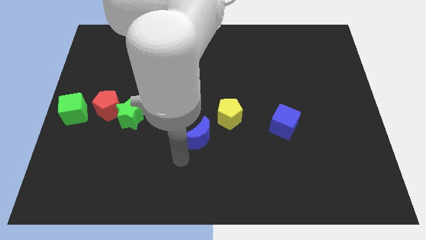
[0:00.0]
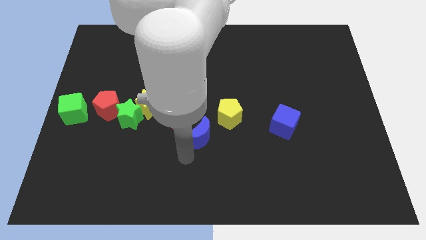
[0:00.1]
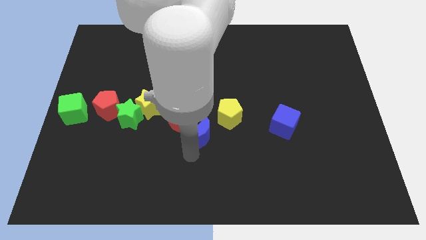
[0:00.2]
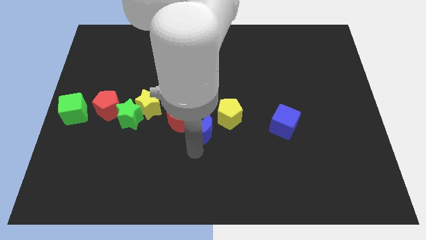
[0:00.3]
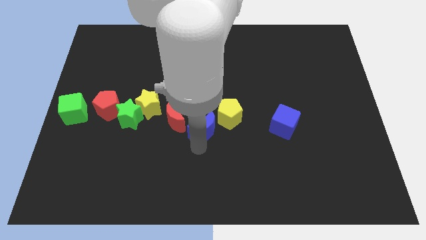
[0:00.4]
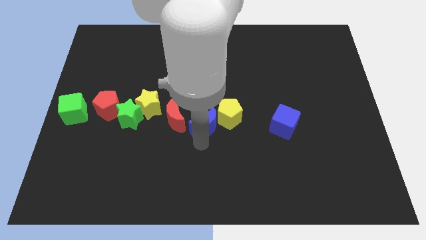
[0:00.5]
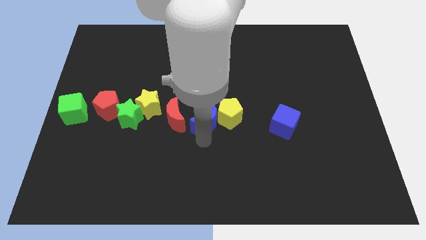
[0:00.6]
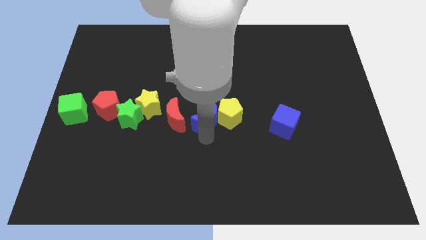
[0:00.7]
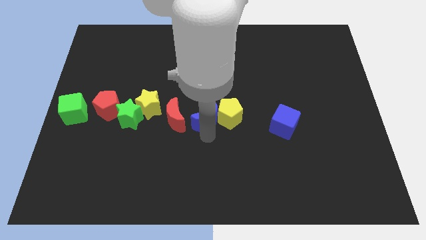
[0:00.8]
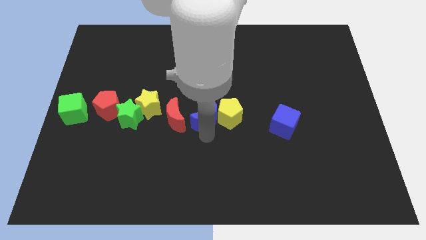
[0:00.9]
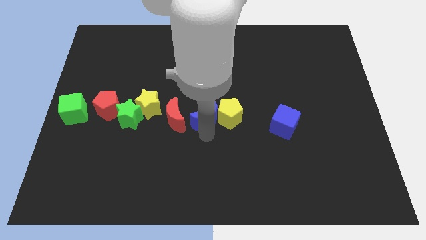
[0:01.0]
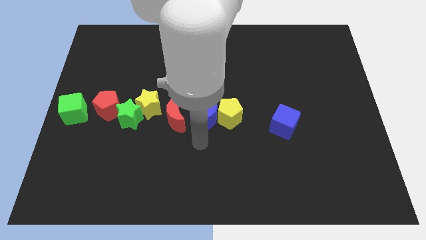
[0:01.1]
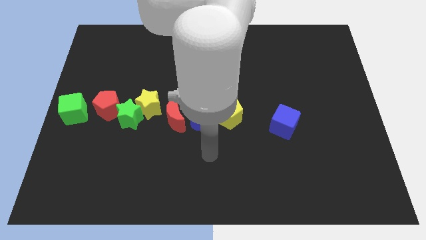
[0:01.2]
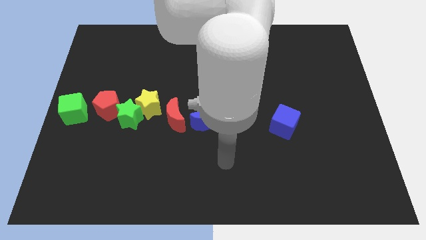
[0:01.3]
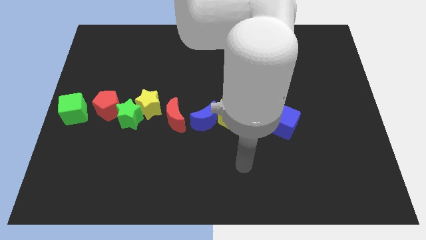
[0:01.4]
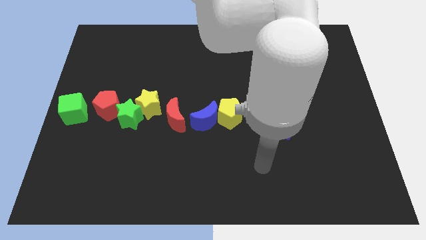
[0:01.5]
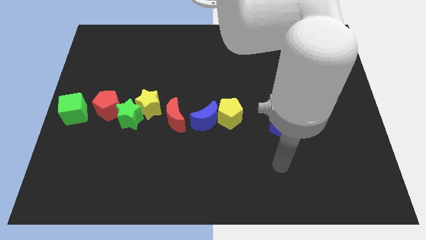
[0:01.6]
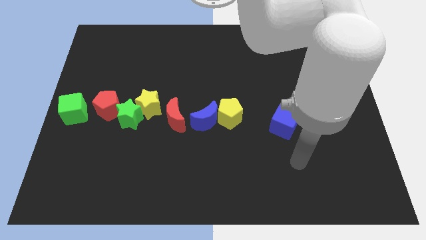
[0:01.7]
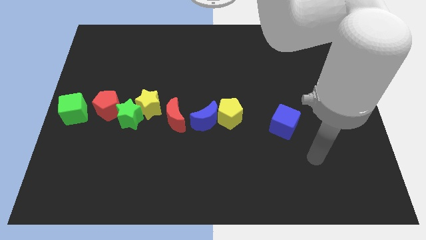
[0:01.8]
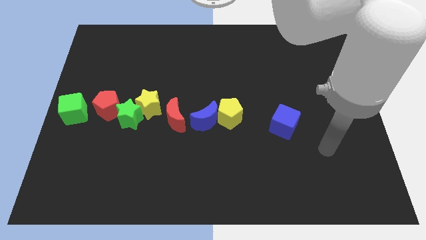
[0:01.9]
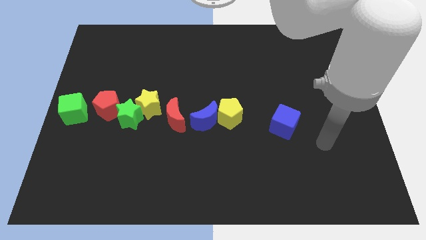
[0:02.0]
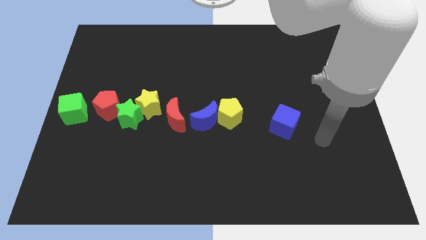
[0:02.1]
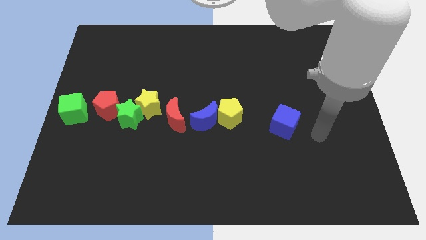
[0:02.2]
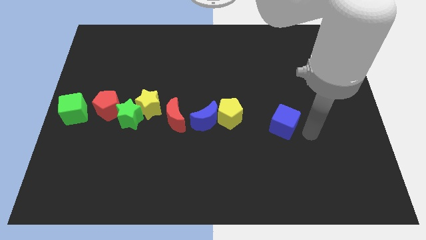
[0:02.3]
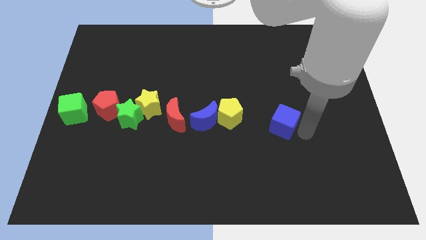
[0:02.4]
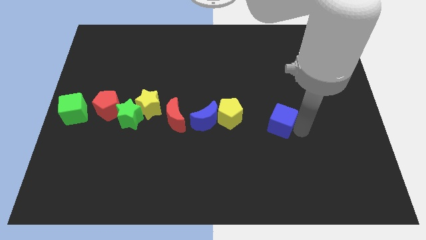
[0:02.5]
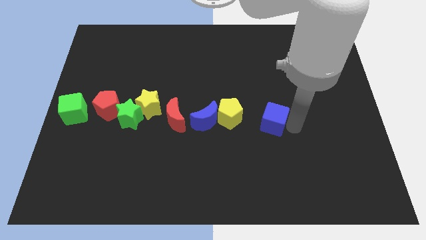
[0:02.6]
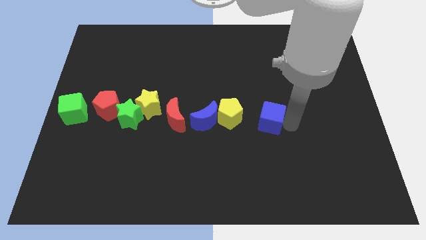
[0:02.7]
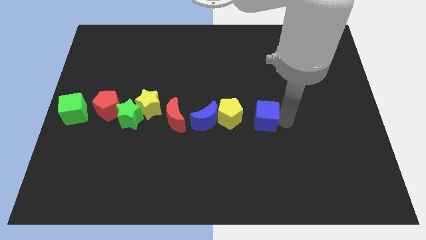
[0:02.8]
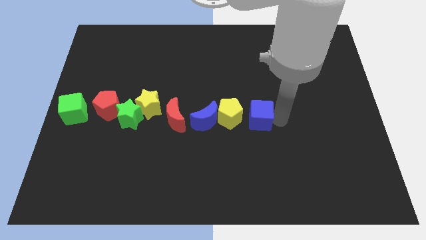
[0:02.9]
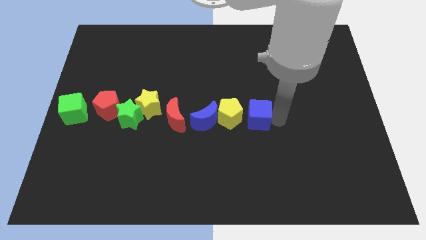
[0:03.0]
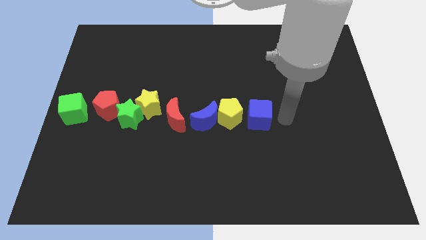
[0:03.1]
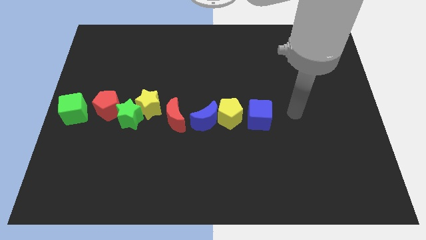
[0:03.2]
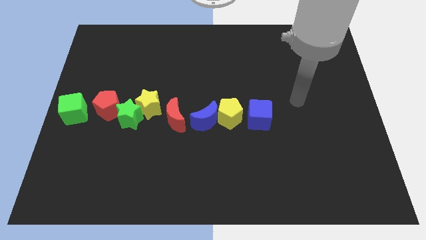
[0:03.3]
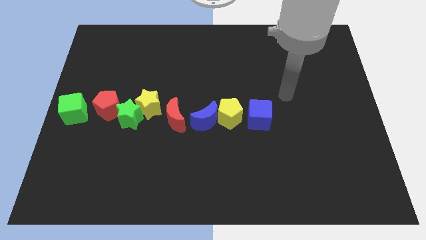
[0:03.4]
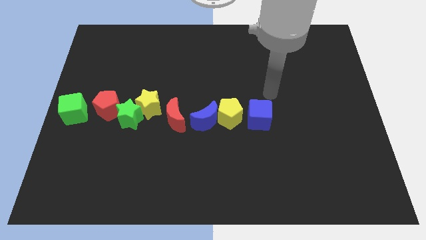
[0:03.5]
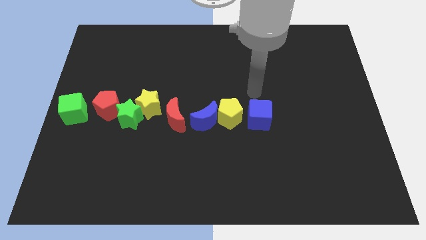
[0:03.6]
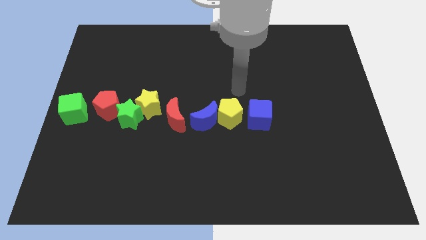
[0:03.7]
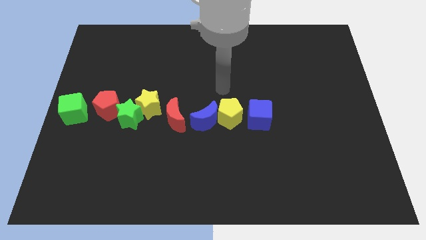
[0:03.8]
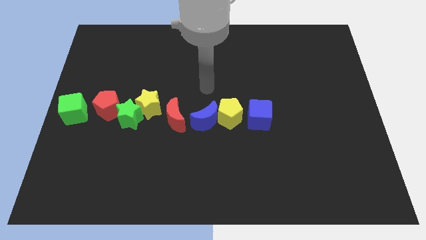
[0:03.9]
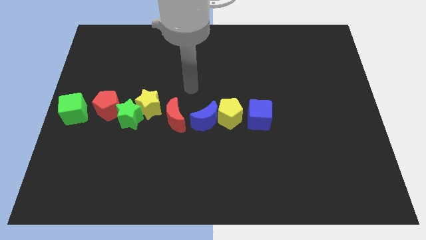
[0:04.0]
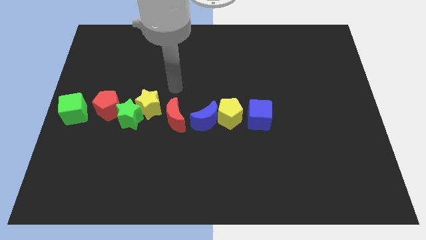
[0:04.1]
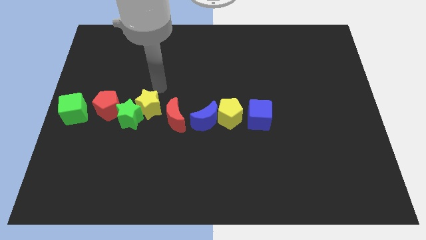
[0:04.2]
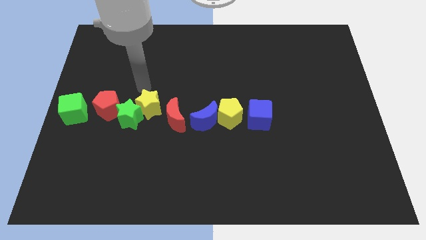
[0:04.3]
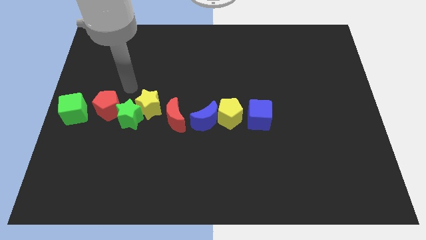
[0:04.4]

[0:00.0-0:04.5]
adjust the blue blocks to form a horizontal line with a group of blocks

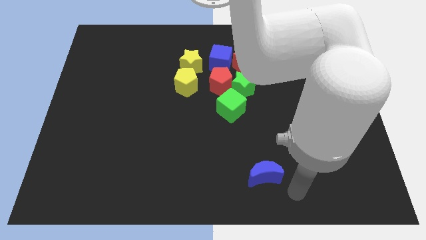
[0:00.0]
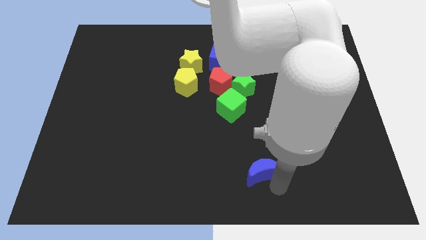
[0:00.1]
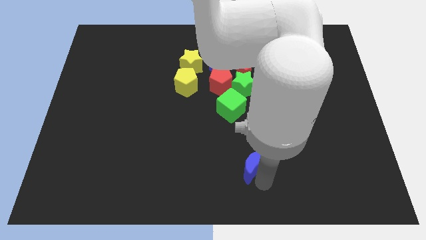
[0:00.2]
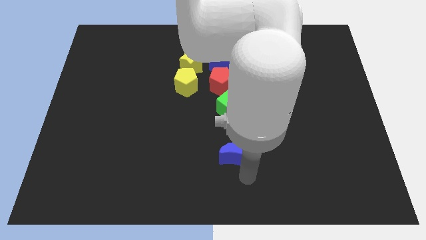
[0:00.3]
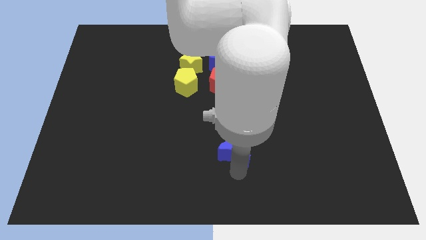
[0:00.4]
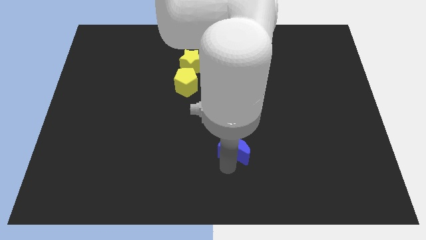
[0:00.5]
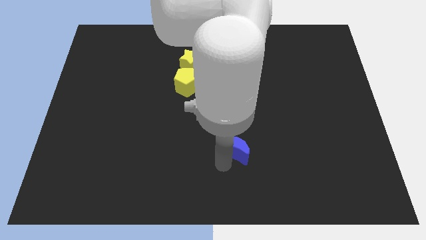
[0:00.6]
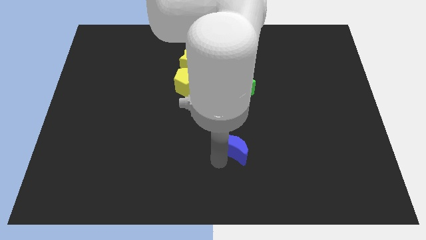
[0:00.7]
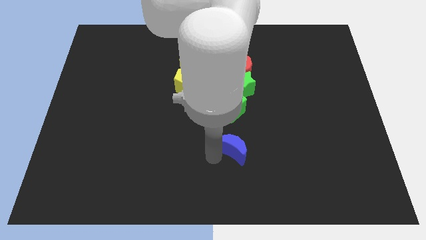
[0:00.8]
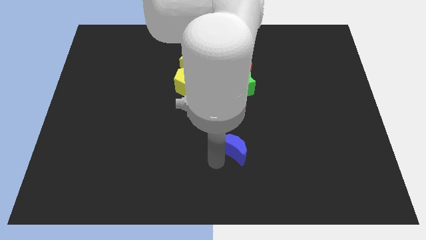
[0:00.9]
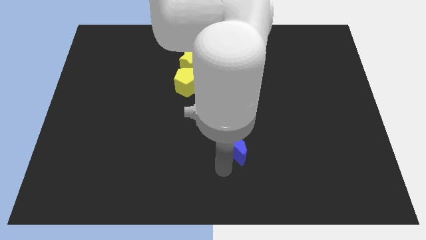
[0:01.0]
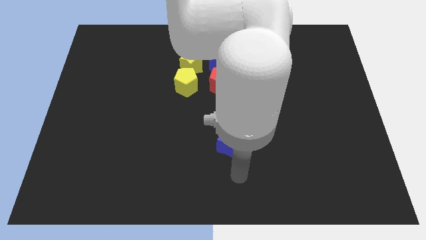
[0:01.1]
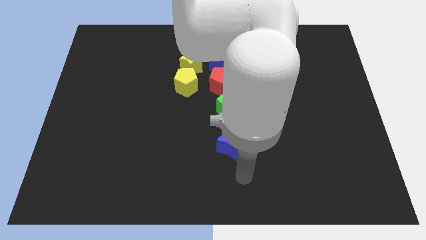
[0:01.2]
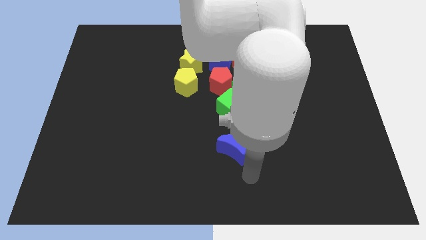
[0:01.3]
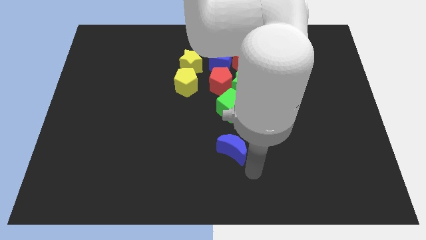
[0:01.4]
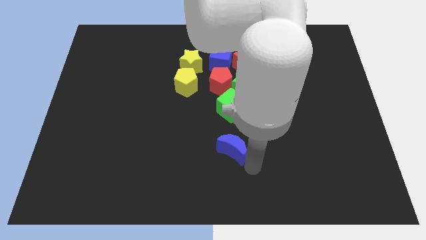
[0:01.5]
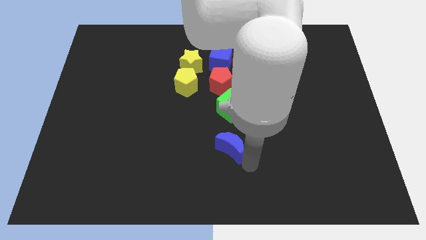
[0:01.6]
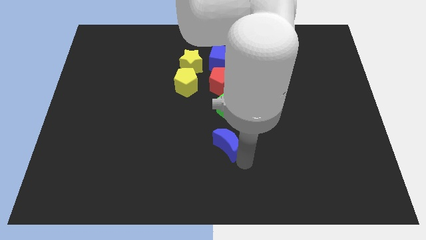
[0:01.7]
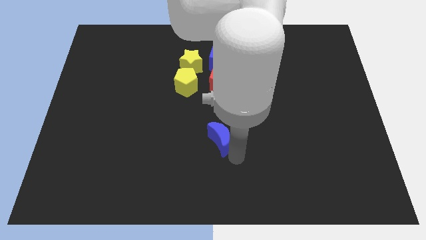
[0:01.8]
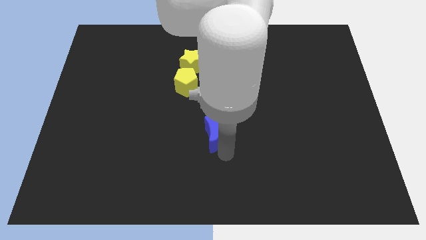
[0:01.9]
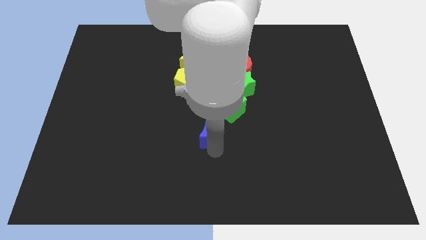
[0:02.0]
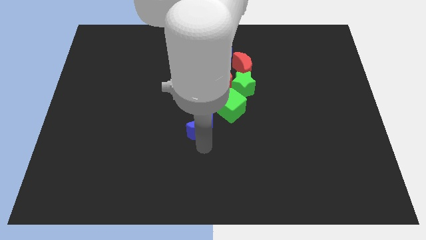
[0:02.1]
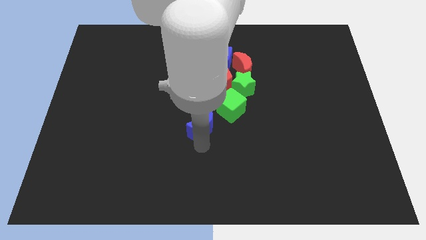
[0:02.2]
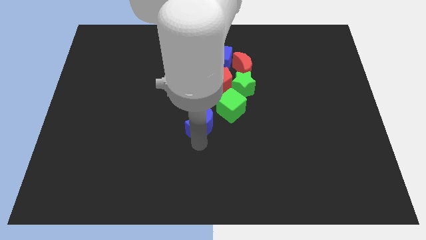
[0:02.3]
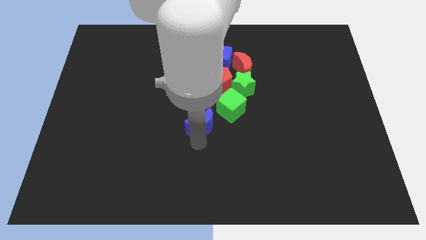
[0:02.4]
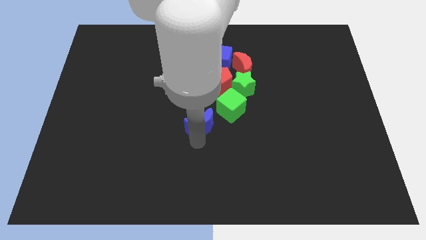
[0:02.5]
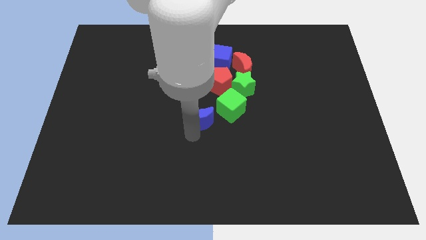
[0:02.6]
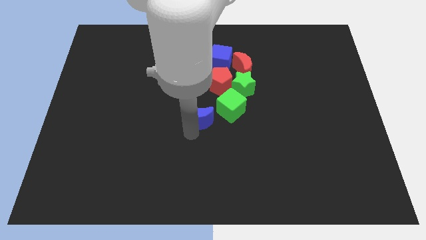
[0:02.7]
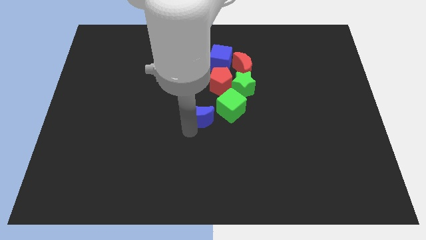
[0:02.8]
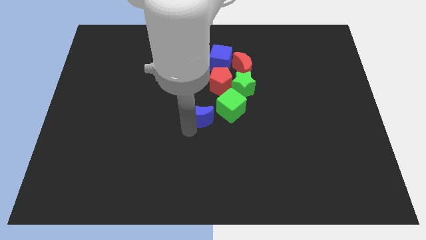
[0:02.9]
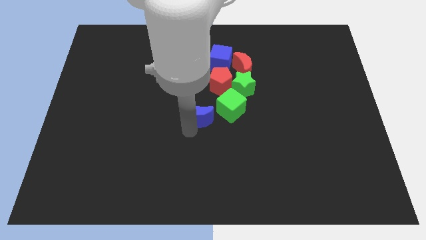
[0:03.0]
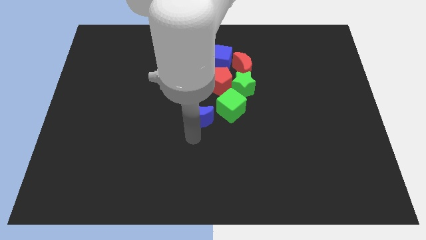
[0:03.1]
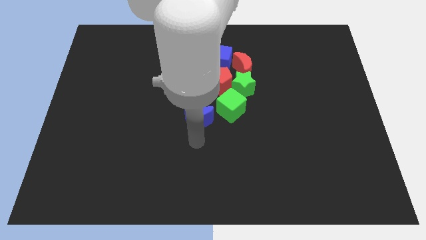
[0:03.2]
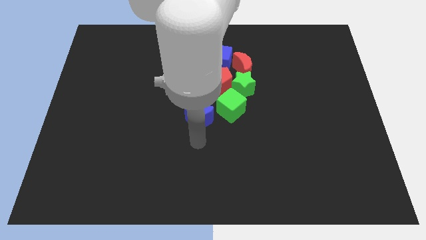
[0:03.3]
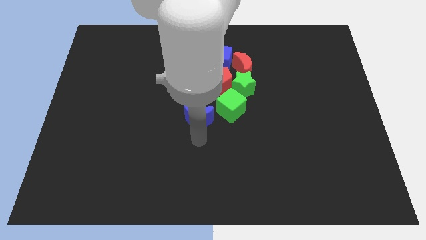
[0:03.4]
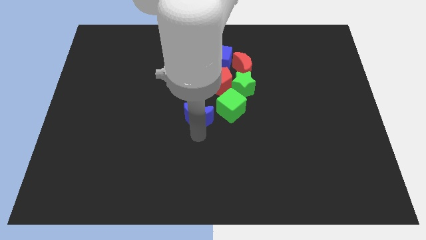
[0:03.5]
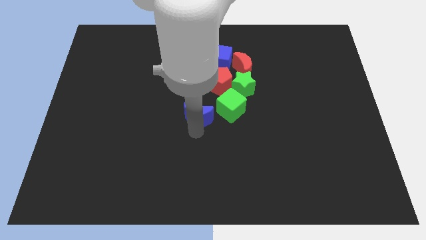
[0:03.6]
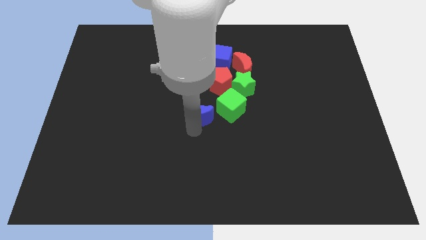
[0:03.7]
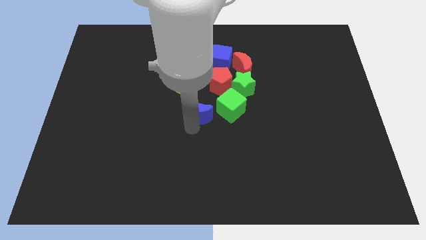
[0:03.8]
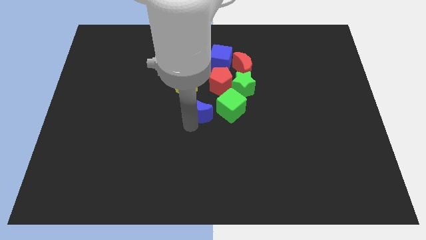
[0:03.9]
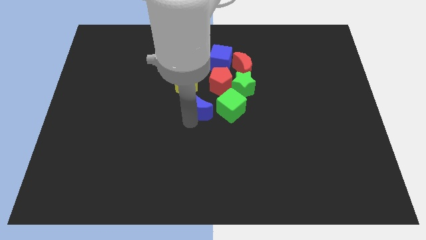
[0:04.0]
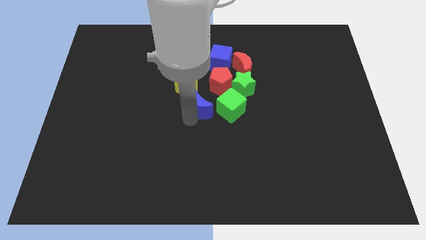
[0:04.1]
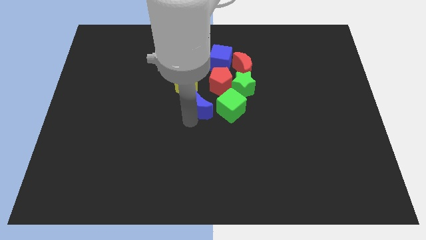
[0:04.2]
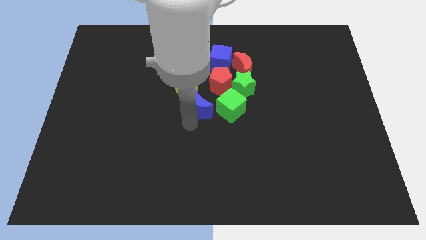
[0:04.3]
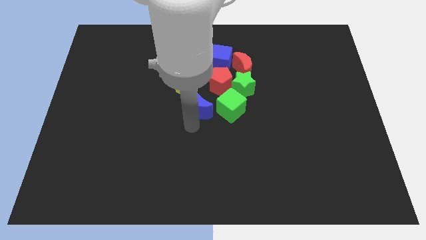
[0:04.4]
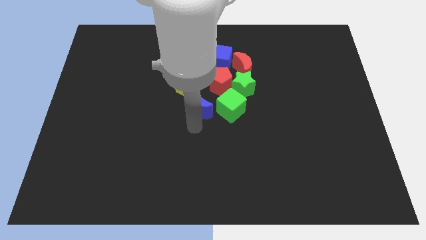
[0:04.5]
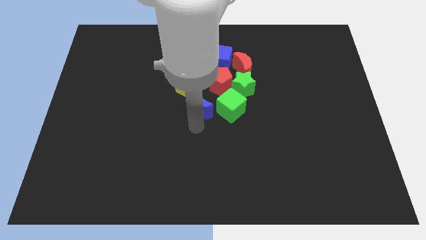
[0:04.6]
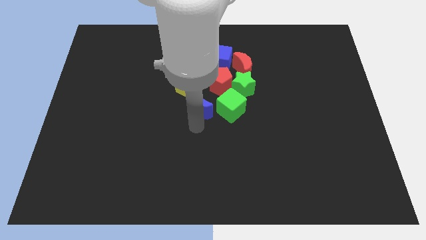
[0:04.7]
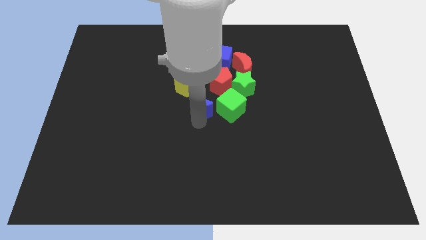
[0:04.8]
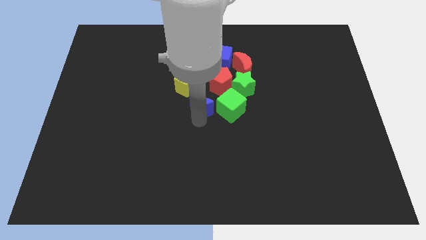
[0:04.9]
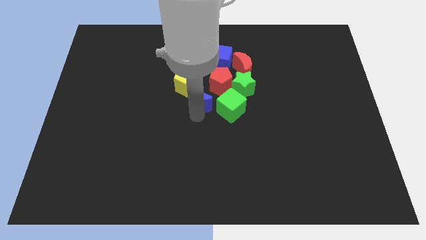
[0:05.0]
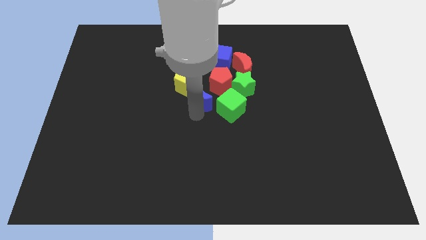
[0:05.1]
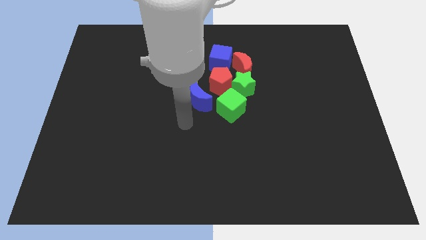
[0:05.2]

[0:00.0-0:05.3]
place blue moon between yellow pentagon and green cube
